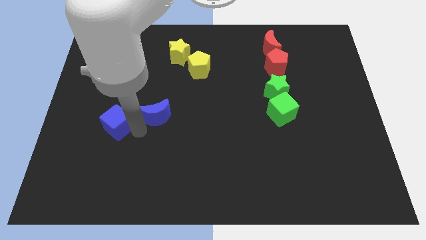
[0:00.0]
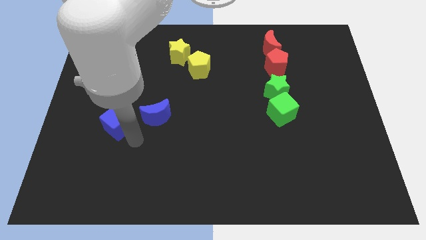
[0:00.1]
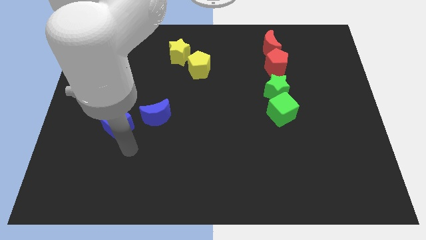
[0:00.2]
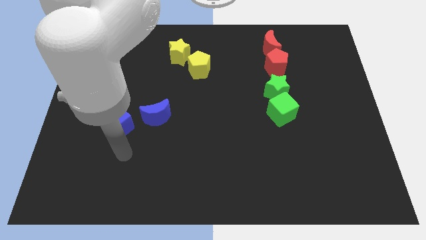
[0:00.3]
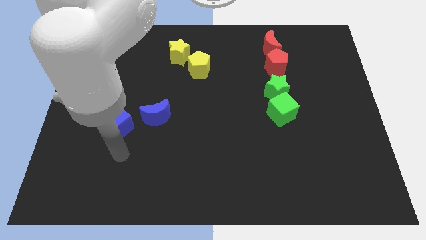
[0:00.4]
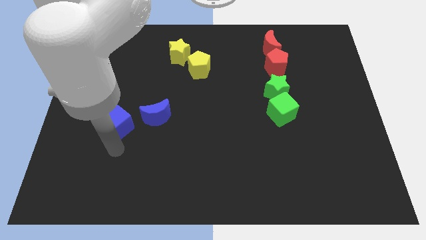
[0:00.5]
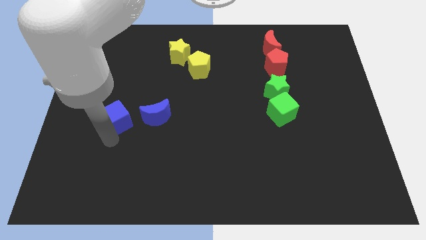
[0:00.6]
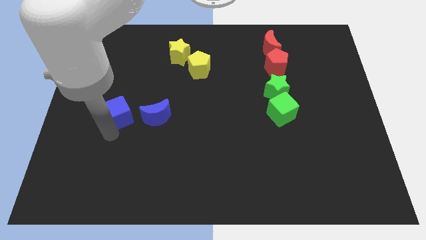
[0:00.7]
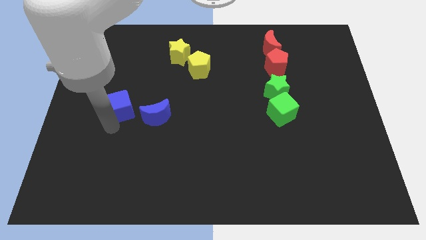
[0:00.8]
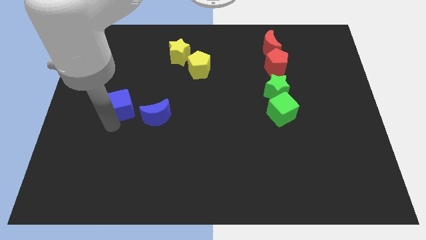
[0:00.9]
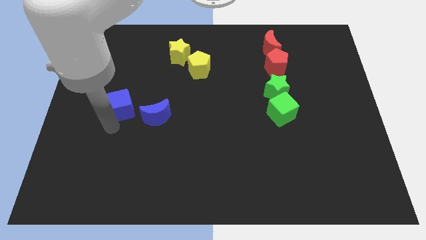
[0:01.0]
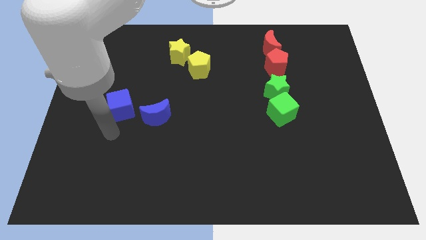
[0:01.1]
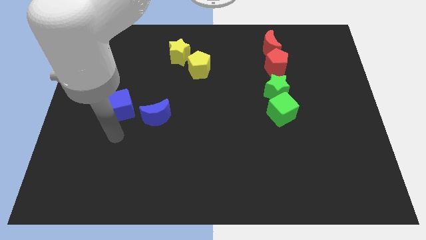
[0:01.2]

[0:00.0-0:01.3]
push the blue cube upwards slightly

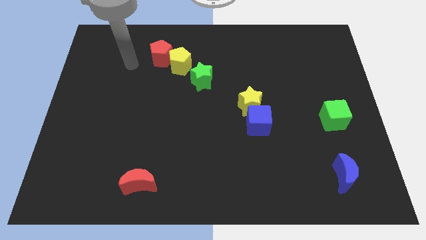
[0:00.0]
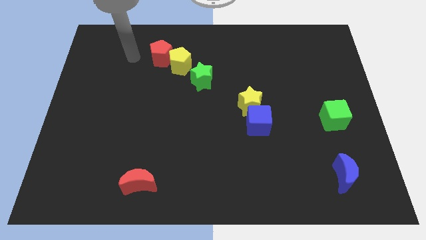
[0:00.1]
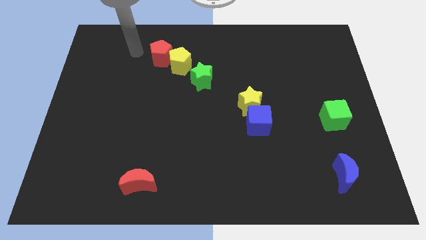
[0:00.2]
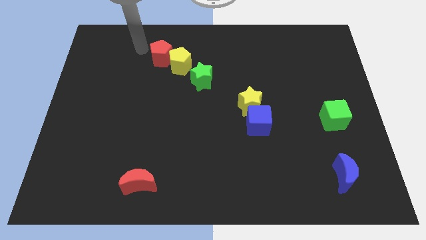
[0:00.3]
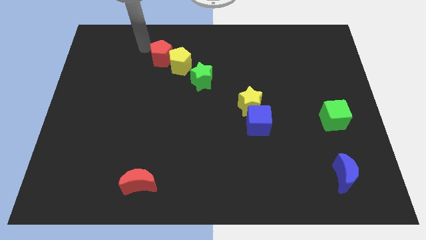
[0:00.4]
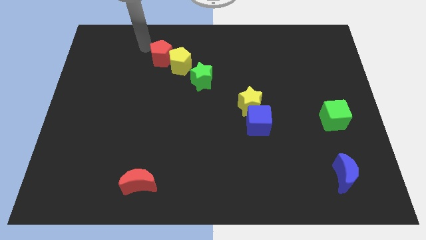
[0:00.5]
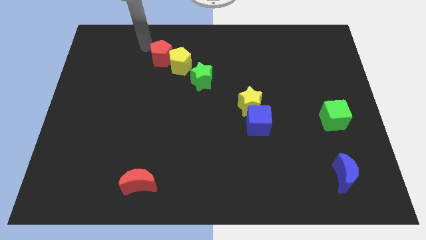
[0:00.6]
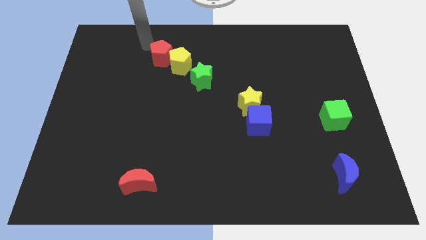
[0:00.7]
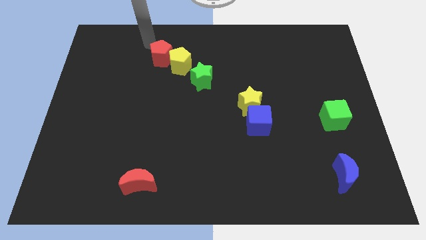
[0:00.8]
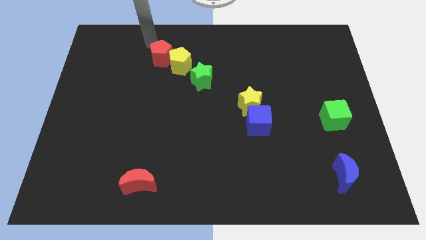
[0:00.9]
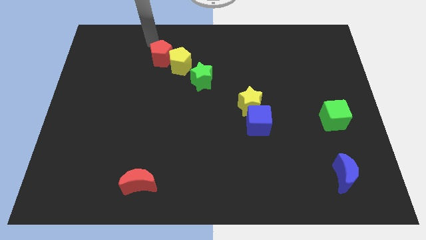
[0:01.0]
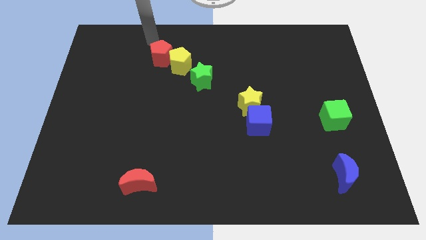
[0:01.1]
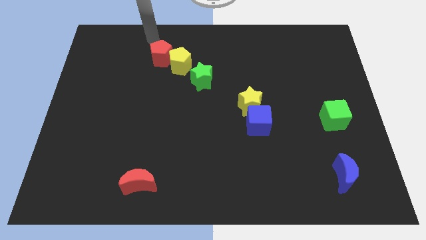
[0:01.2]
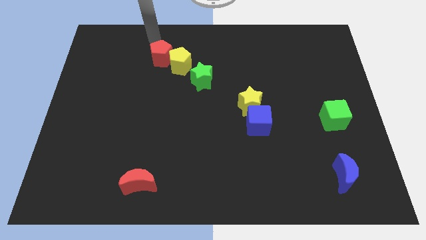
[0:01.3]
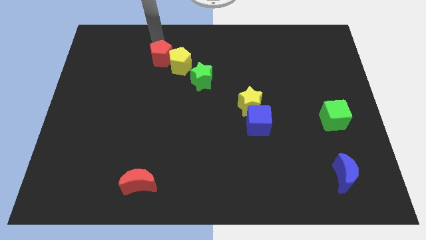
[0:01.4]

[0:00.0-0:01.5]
go and place your arm at the top of the red pentagon

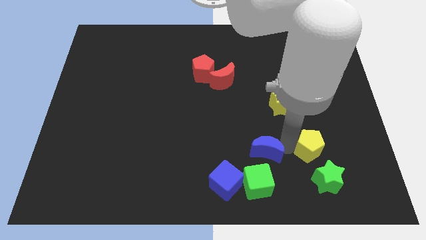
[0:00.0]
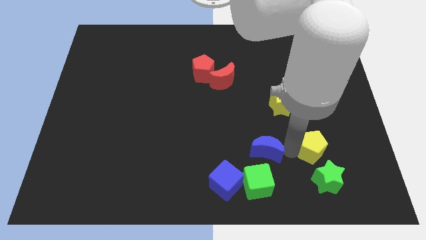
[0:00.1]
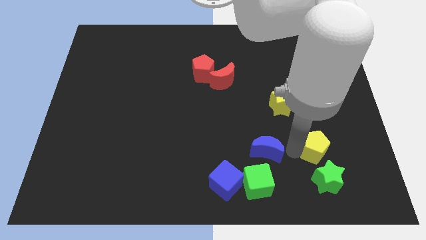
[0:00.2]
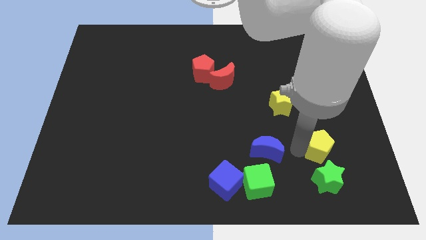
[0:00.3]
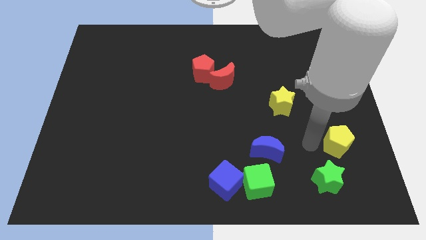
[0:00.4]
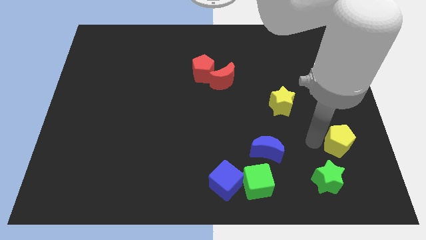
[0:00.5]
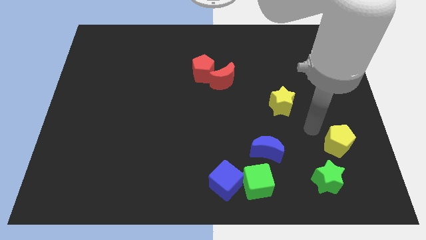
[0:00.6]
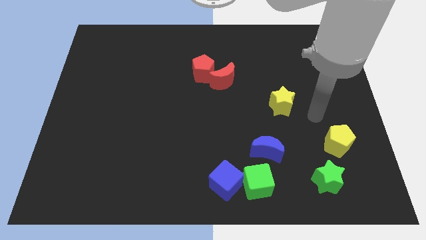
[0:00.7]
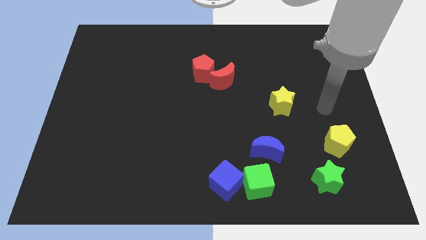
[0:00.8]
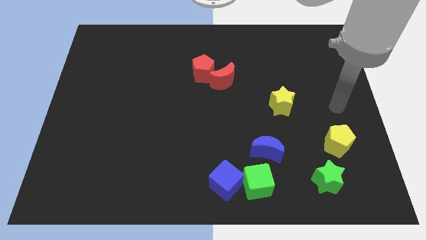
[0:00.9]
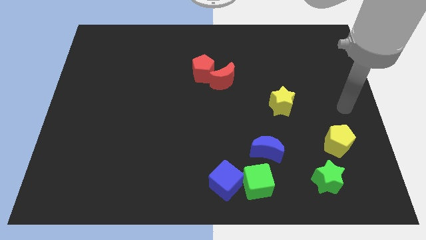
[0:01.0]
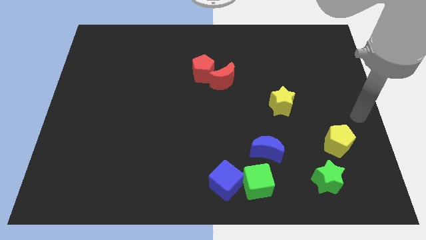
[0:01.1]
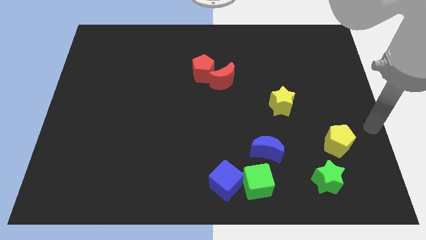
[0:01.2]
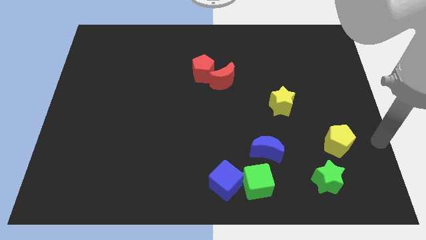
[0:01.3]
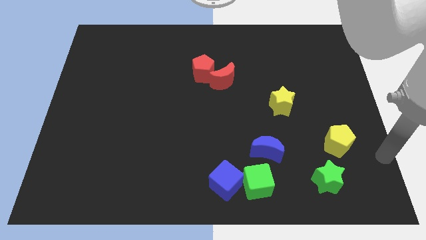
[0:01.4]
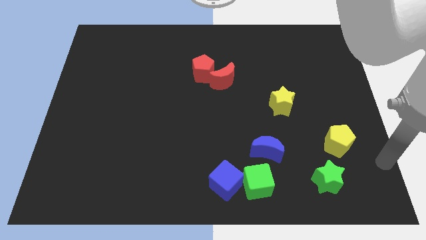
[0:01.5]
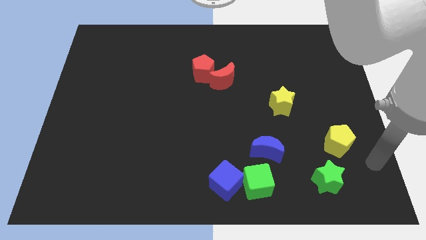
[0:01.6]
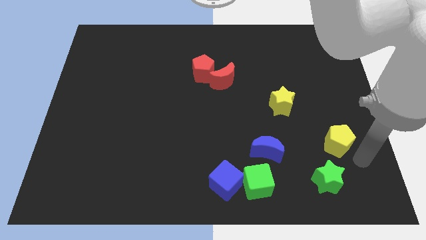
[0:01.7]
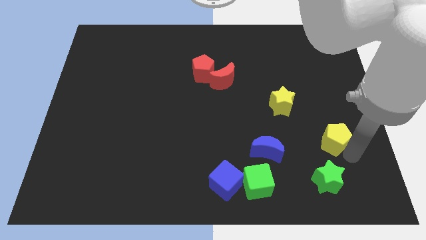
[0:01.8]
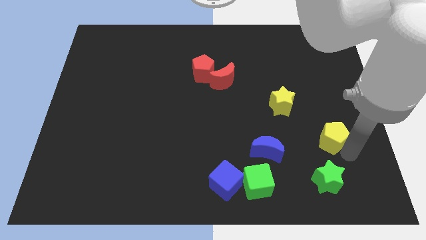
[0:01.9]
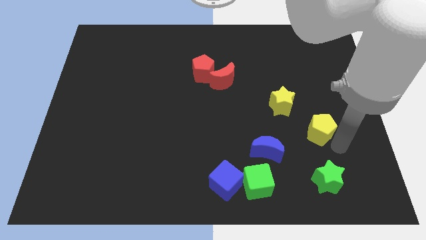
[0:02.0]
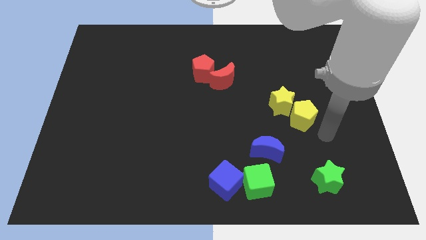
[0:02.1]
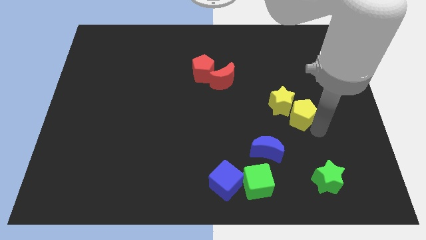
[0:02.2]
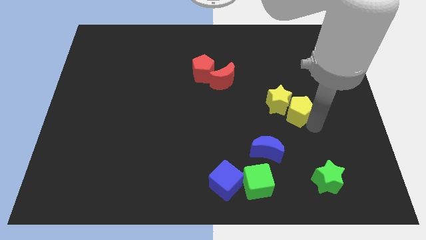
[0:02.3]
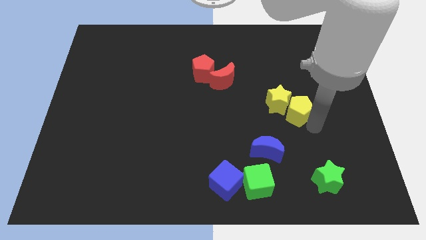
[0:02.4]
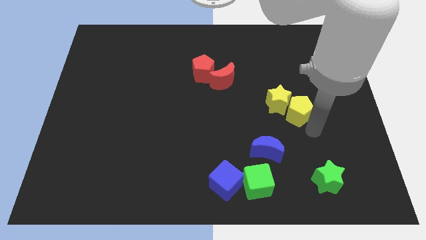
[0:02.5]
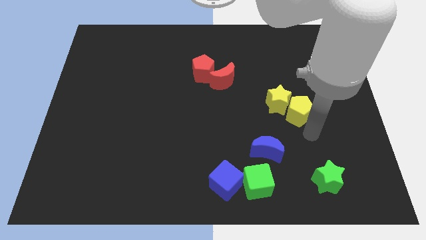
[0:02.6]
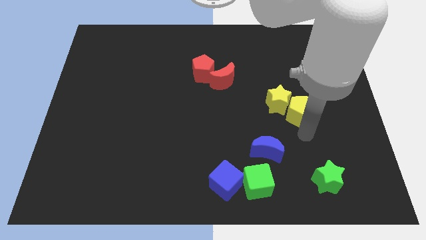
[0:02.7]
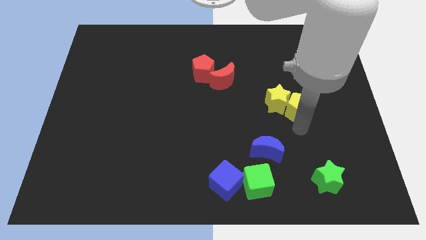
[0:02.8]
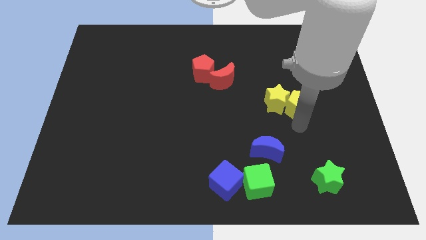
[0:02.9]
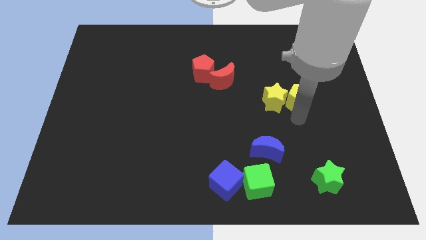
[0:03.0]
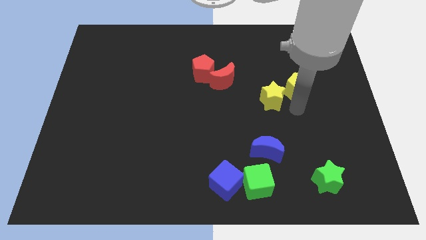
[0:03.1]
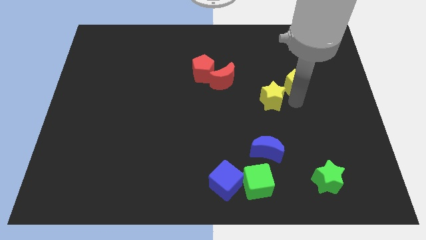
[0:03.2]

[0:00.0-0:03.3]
push the yellow pentagon closer to the yellow star

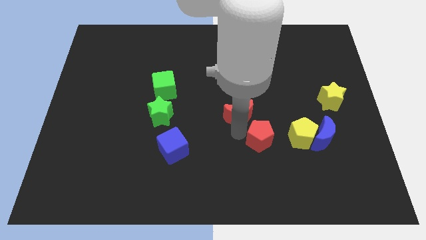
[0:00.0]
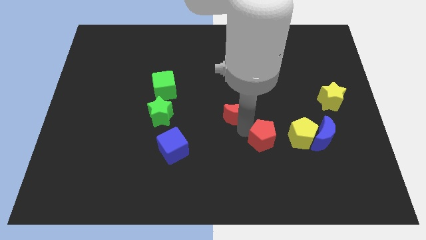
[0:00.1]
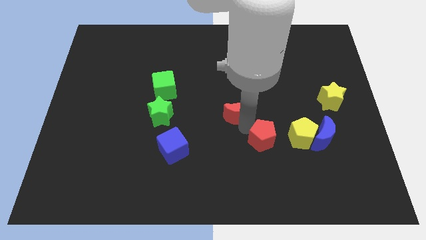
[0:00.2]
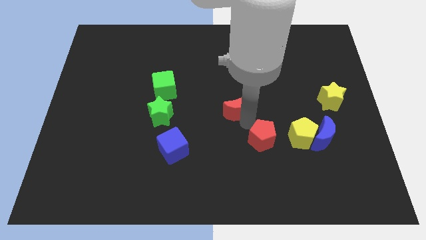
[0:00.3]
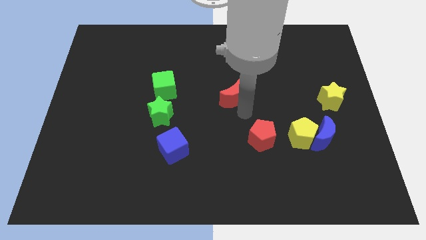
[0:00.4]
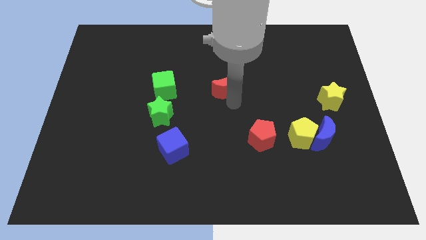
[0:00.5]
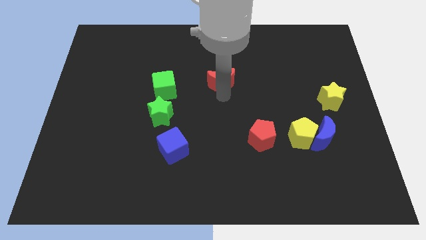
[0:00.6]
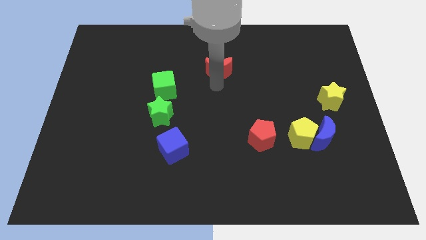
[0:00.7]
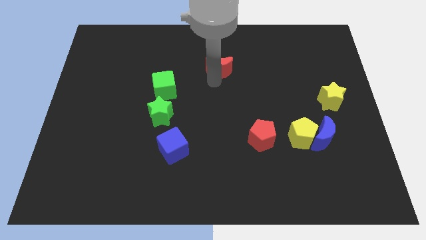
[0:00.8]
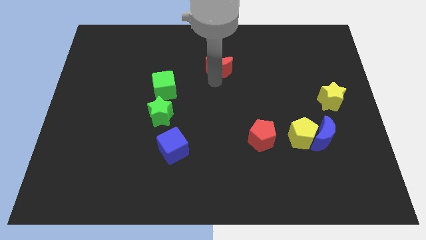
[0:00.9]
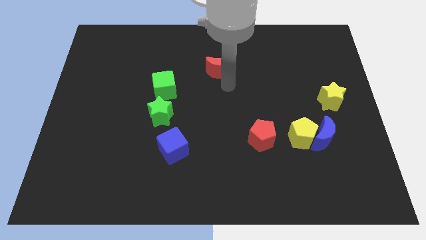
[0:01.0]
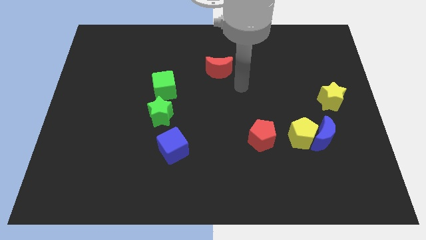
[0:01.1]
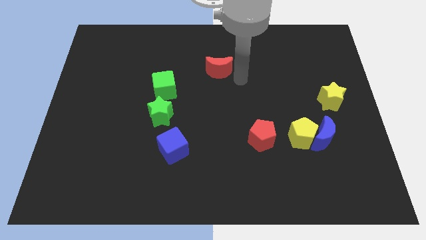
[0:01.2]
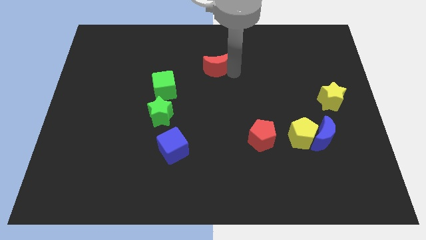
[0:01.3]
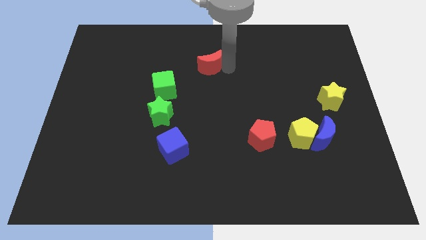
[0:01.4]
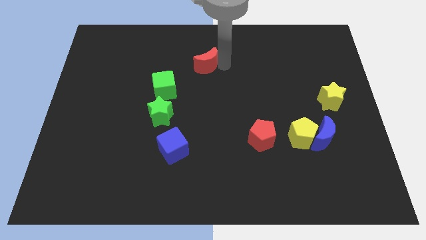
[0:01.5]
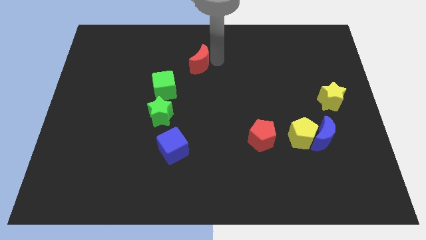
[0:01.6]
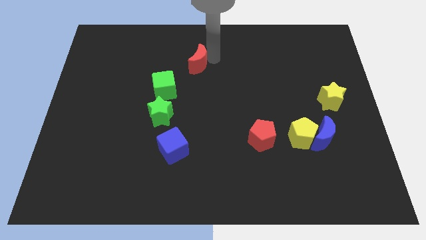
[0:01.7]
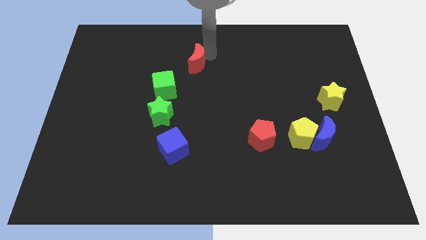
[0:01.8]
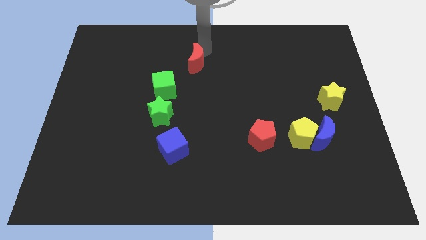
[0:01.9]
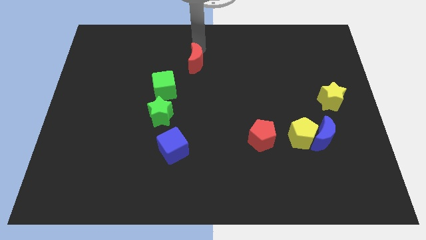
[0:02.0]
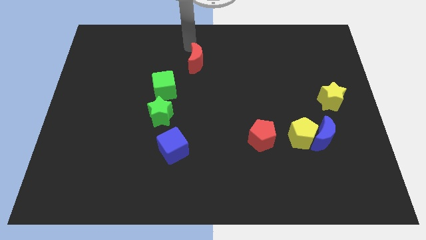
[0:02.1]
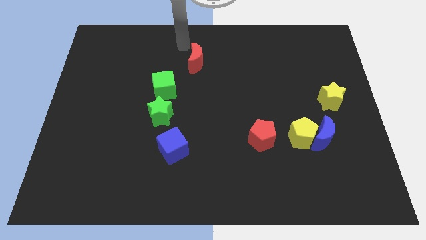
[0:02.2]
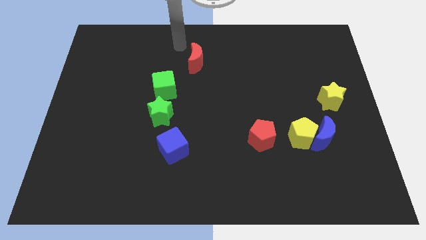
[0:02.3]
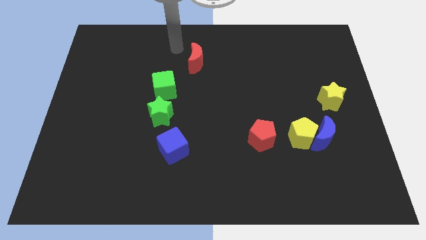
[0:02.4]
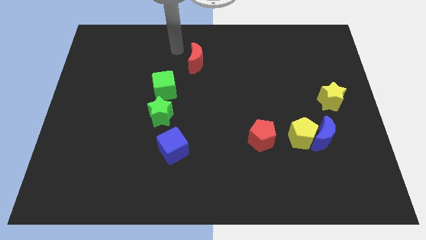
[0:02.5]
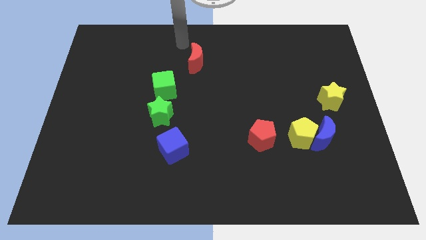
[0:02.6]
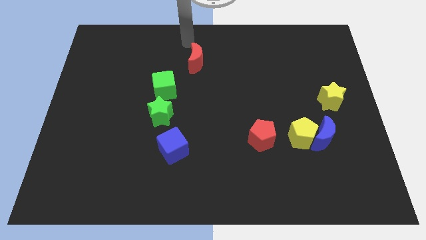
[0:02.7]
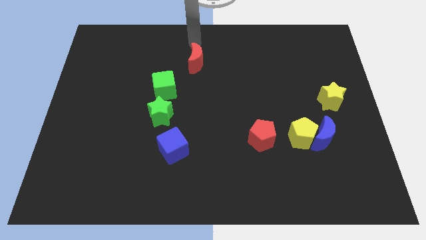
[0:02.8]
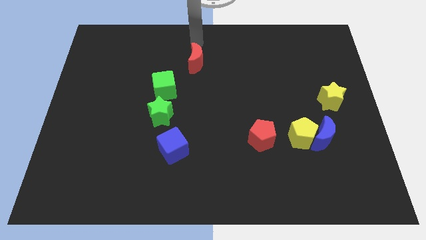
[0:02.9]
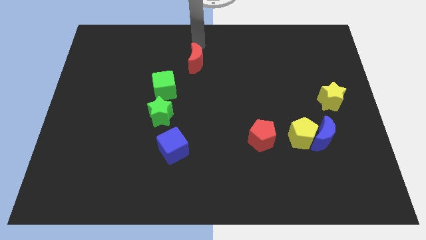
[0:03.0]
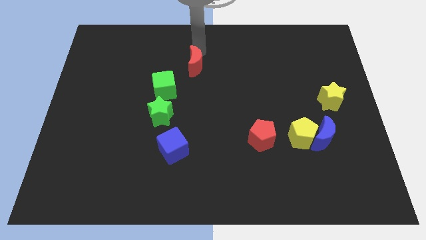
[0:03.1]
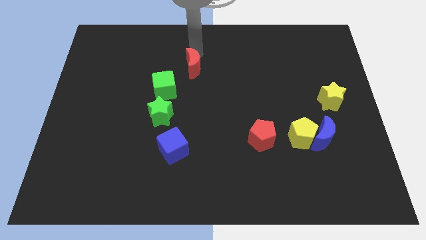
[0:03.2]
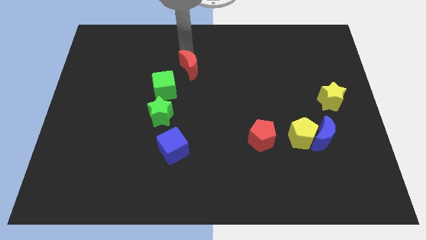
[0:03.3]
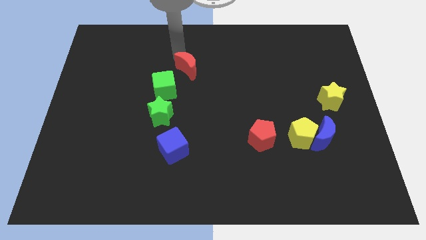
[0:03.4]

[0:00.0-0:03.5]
move red crescent towards center top
